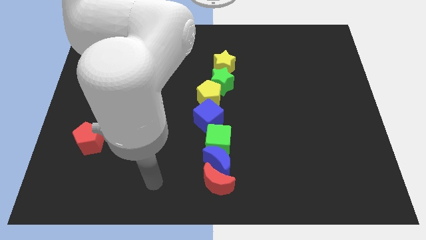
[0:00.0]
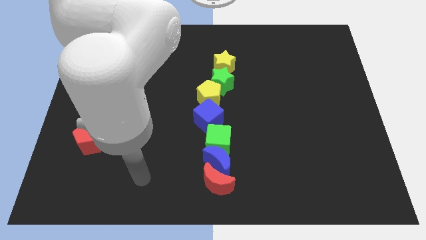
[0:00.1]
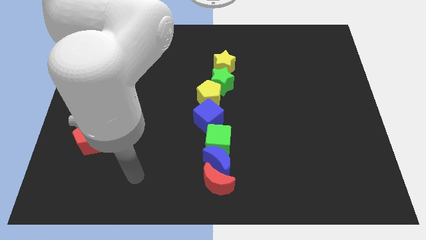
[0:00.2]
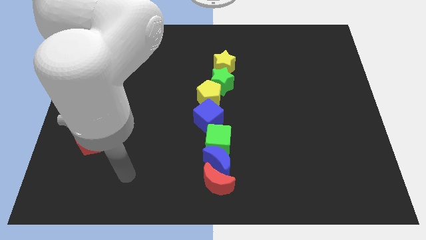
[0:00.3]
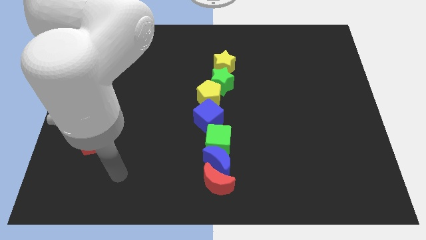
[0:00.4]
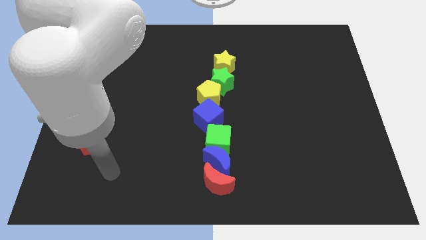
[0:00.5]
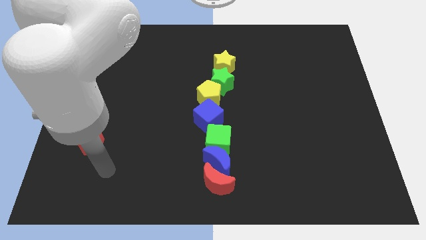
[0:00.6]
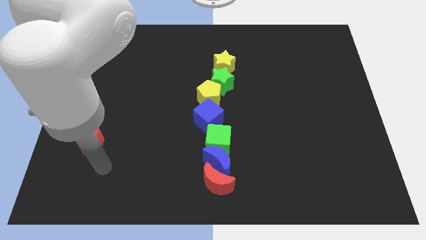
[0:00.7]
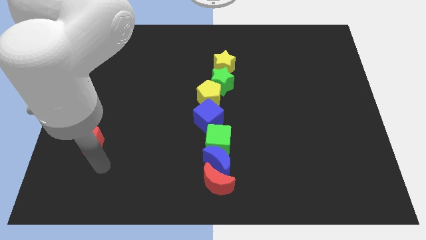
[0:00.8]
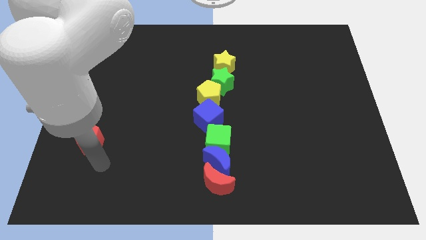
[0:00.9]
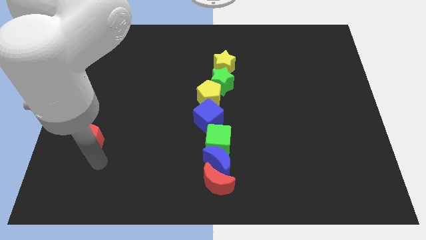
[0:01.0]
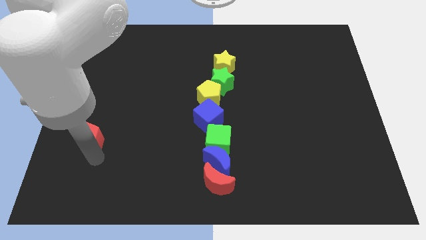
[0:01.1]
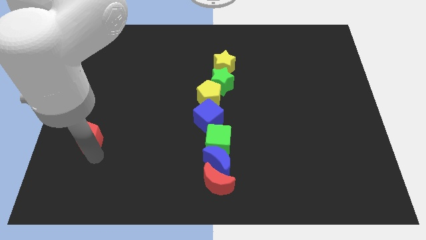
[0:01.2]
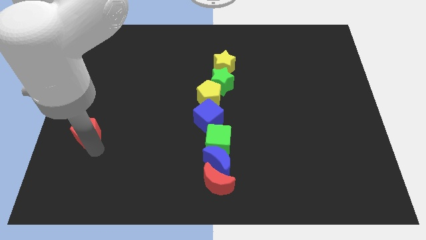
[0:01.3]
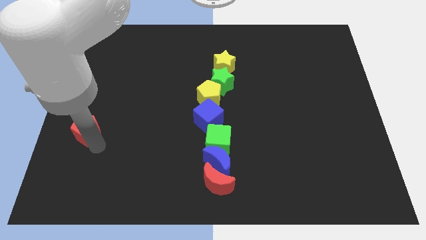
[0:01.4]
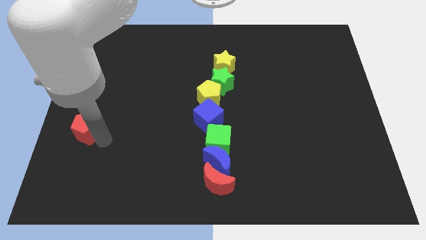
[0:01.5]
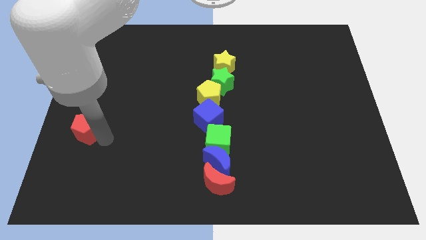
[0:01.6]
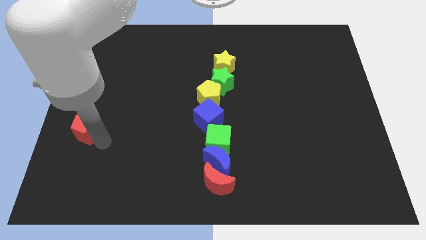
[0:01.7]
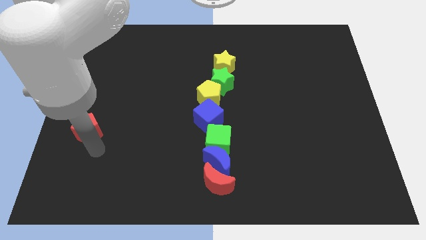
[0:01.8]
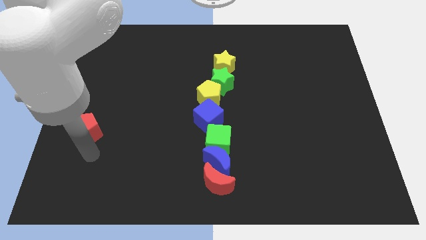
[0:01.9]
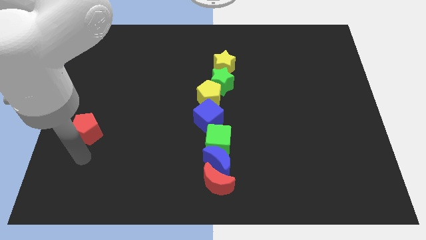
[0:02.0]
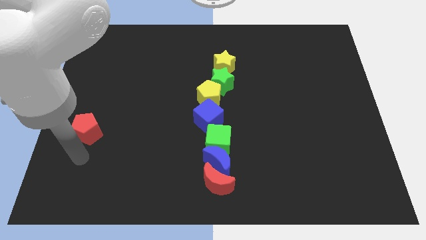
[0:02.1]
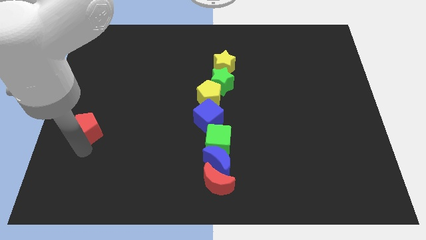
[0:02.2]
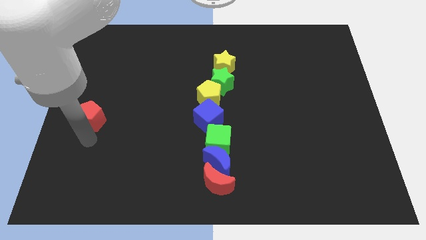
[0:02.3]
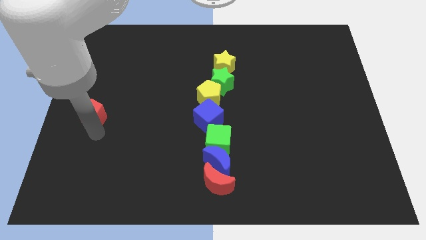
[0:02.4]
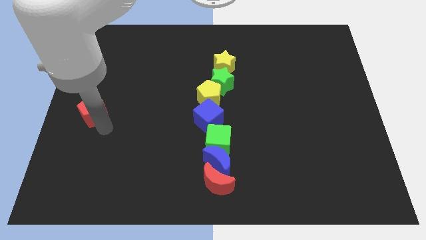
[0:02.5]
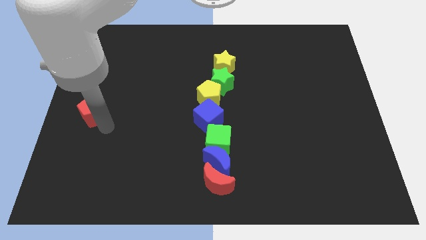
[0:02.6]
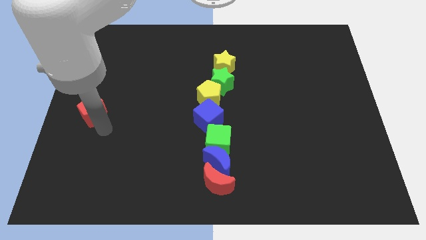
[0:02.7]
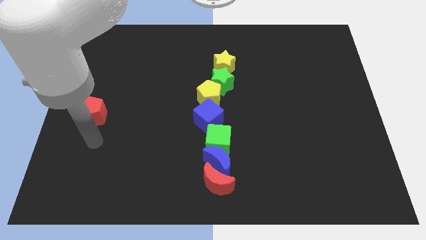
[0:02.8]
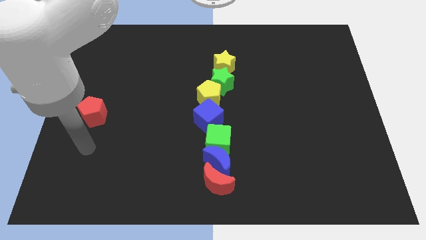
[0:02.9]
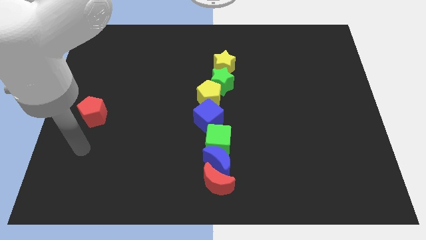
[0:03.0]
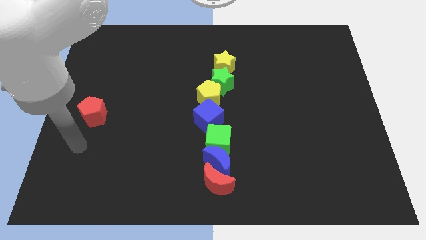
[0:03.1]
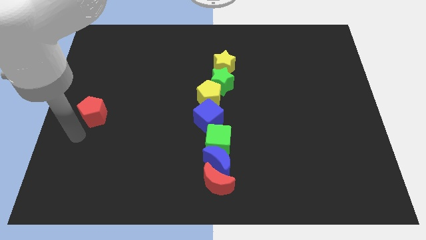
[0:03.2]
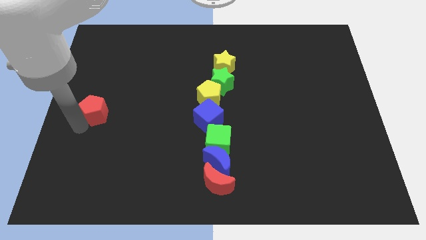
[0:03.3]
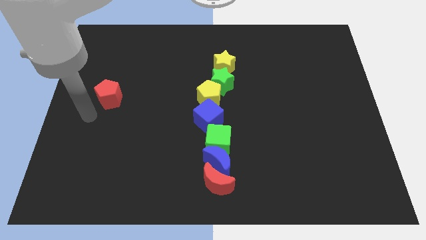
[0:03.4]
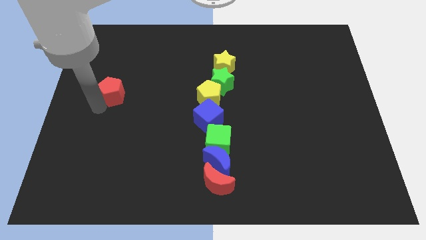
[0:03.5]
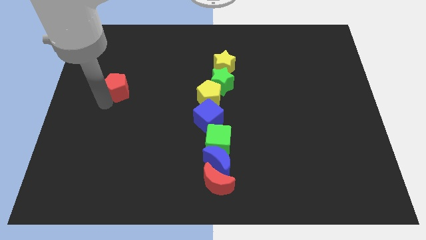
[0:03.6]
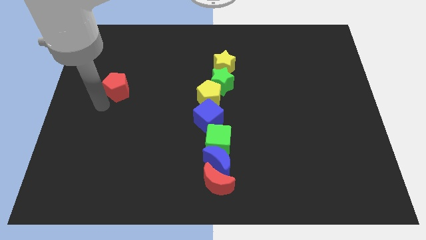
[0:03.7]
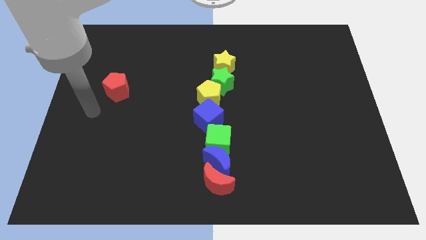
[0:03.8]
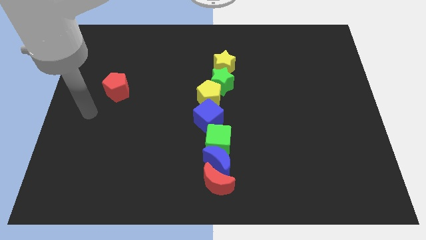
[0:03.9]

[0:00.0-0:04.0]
place the red pentagon horizontally to the left side of the yellow pentagon

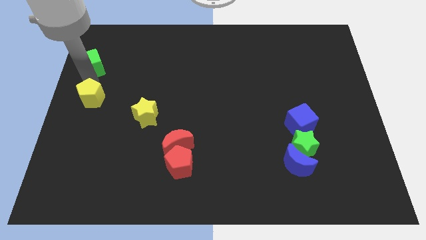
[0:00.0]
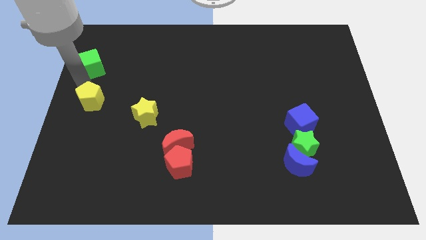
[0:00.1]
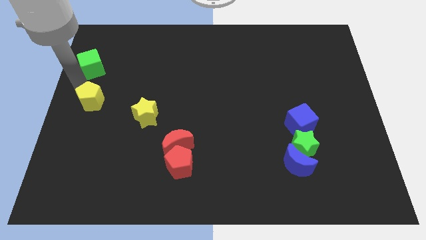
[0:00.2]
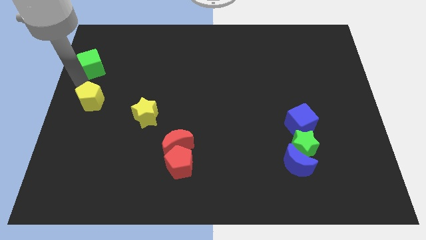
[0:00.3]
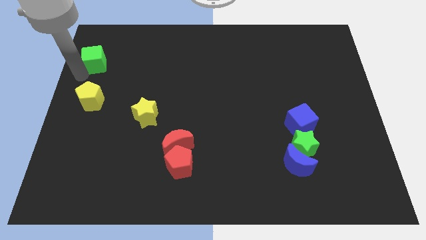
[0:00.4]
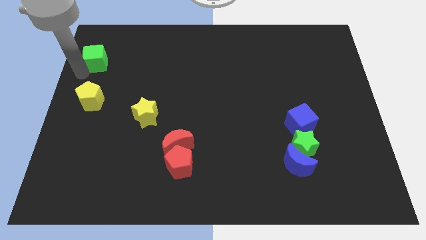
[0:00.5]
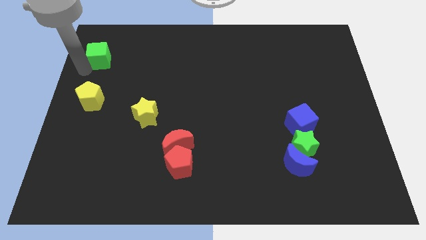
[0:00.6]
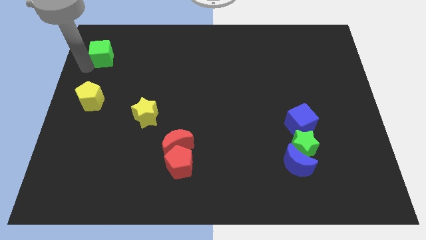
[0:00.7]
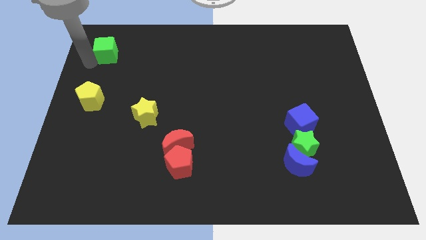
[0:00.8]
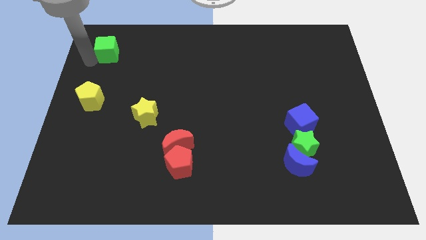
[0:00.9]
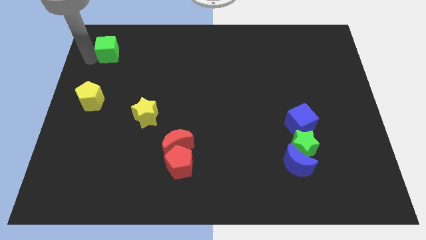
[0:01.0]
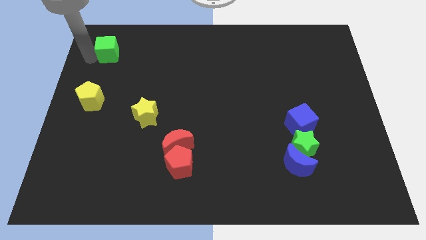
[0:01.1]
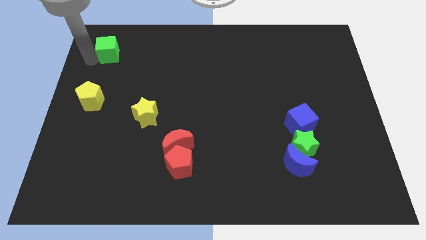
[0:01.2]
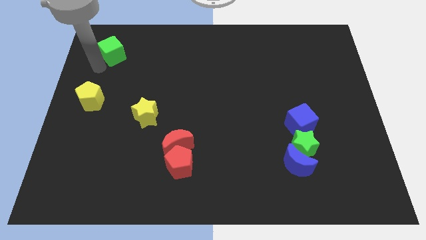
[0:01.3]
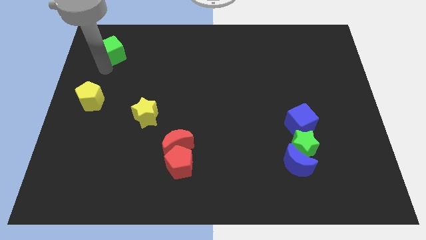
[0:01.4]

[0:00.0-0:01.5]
push the green cube away from the yellow pentagon

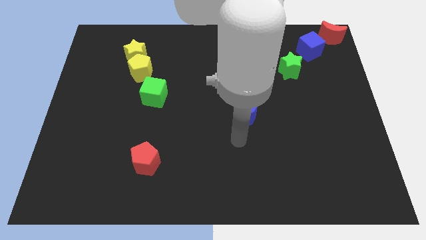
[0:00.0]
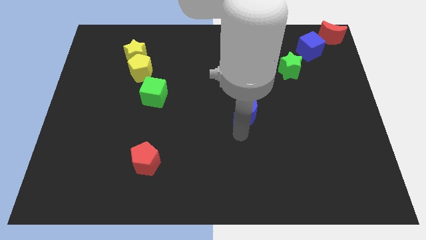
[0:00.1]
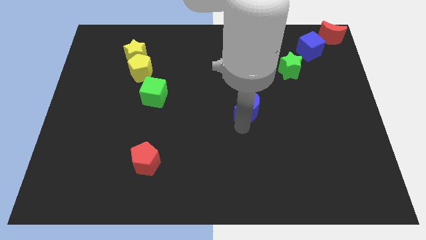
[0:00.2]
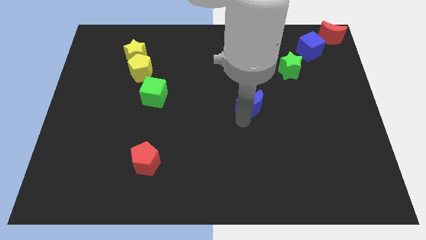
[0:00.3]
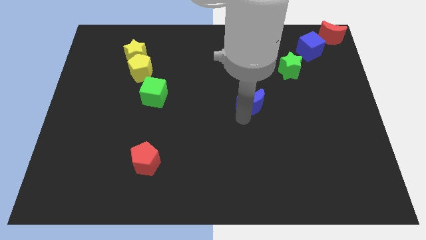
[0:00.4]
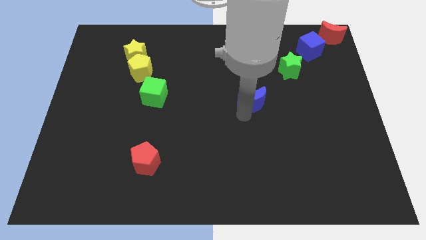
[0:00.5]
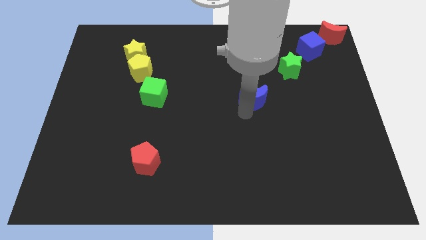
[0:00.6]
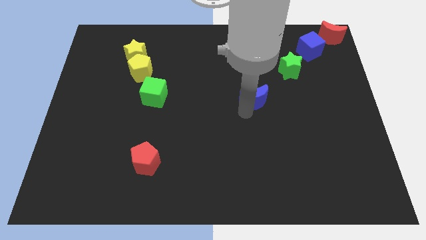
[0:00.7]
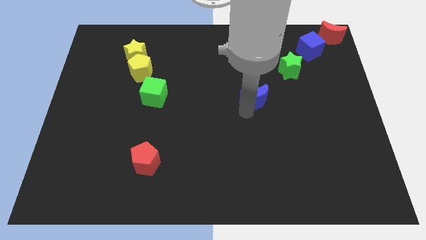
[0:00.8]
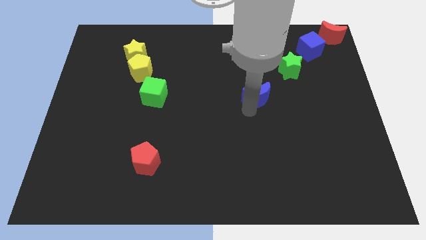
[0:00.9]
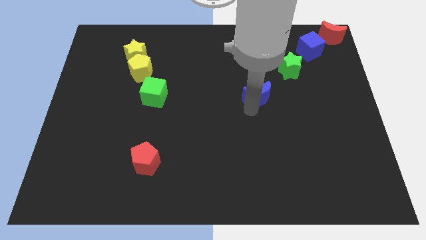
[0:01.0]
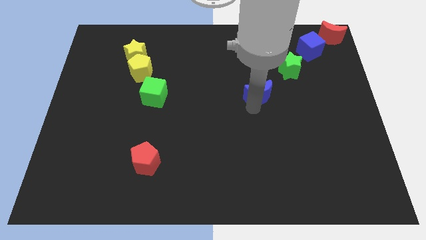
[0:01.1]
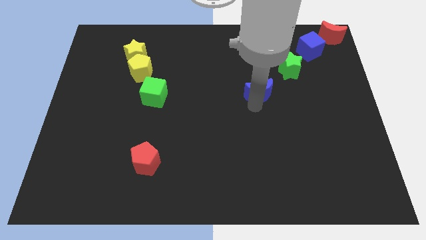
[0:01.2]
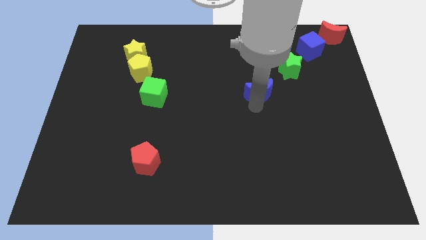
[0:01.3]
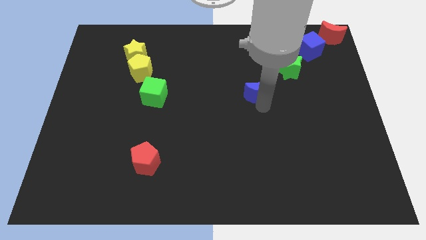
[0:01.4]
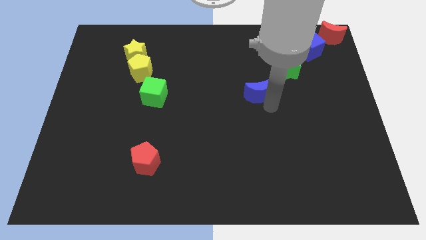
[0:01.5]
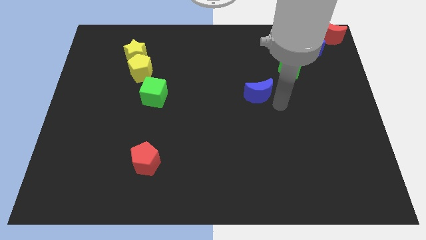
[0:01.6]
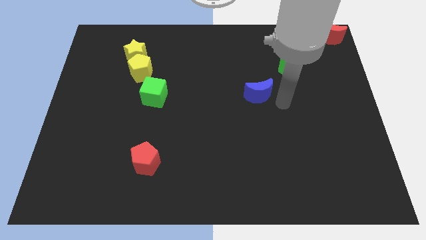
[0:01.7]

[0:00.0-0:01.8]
push the blue crescent towards the diagonal bottom left corner of the green star

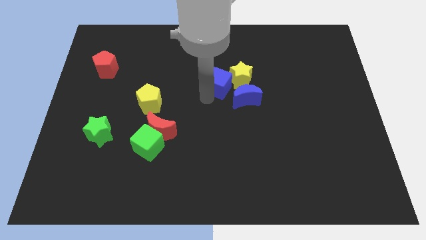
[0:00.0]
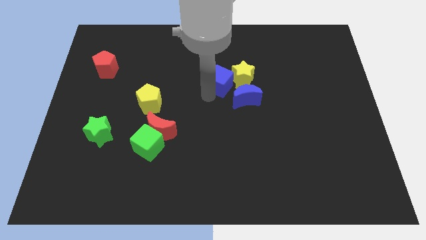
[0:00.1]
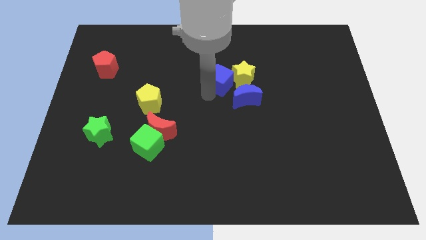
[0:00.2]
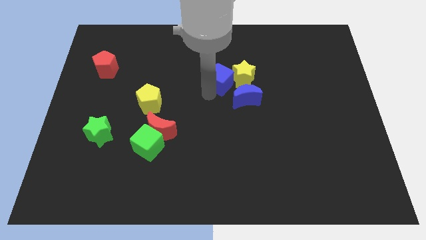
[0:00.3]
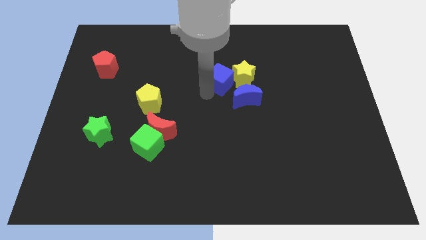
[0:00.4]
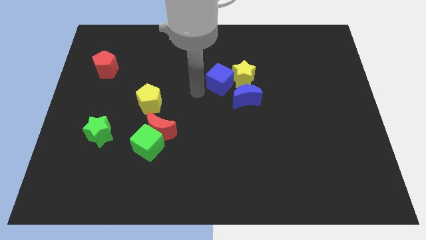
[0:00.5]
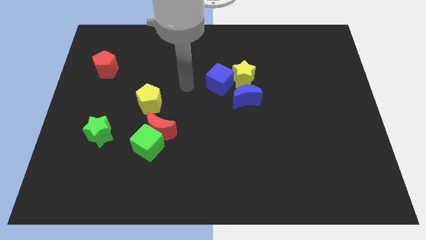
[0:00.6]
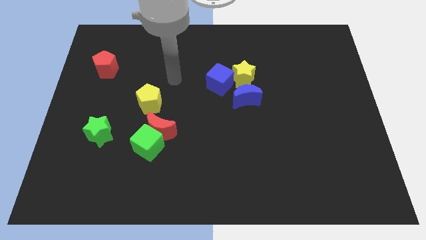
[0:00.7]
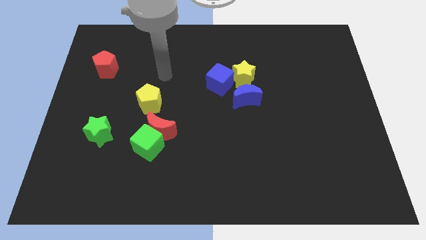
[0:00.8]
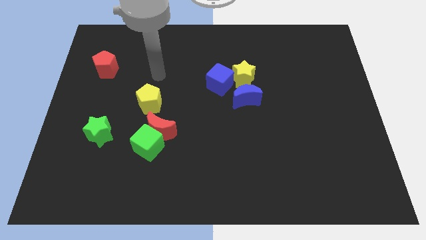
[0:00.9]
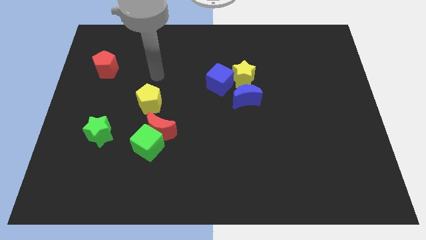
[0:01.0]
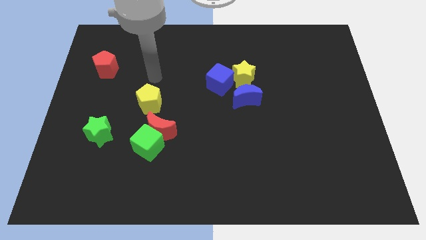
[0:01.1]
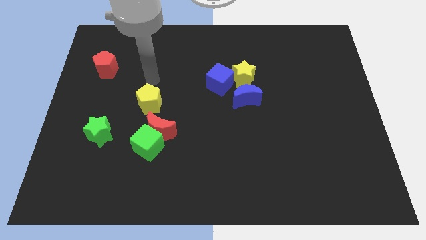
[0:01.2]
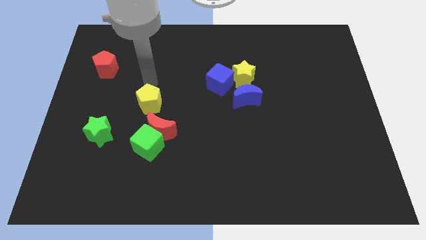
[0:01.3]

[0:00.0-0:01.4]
place the arm above the yellow pentagon

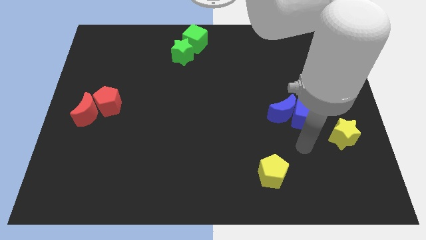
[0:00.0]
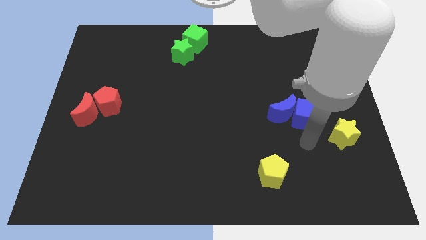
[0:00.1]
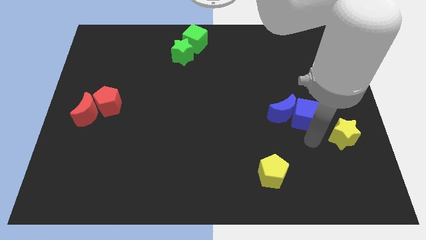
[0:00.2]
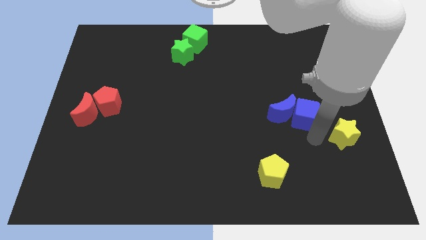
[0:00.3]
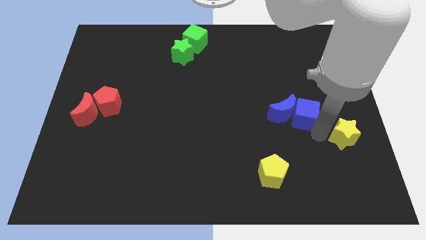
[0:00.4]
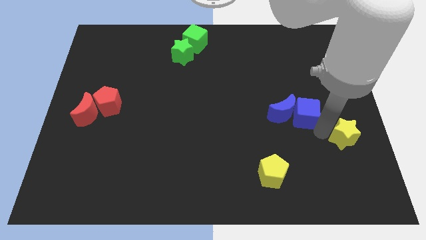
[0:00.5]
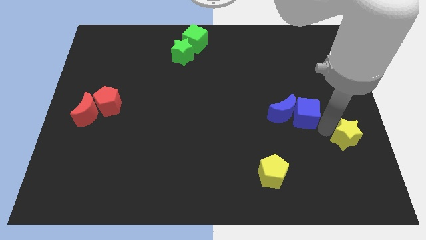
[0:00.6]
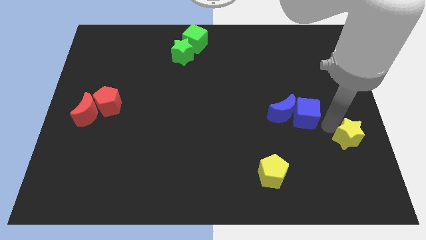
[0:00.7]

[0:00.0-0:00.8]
touch at the left side of the yellow star
